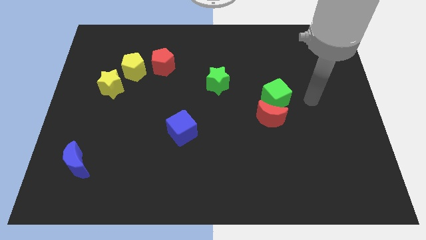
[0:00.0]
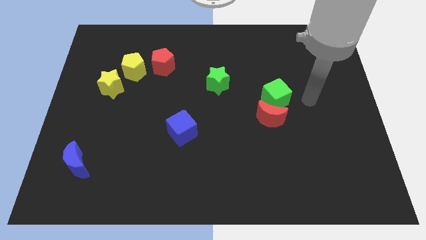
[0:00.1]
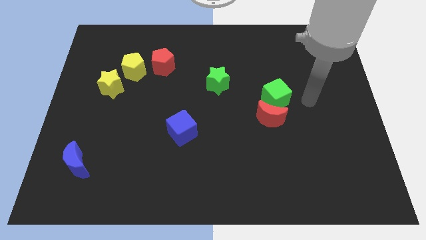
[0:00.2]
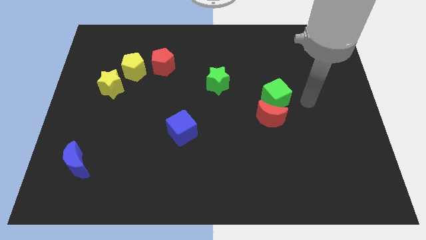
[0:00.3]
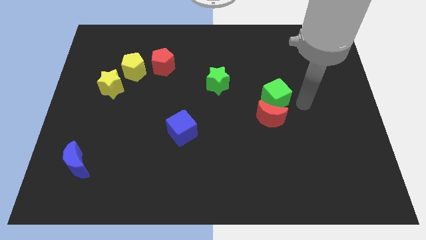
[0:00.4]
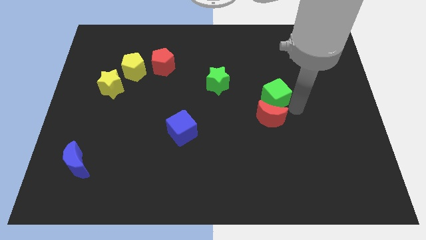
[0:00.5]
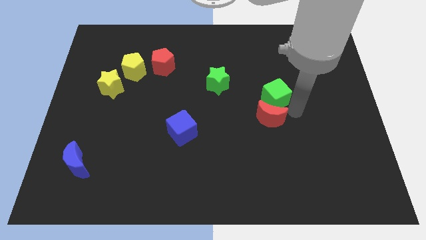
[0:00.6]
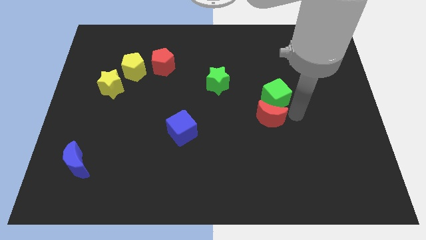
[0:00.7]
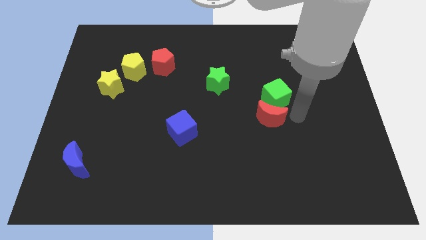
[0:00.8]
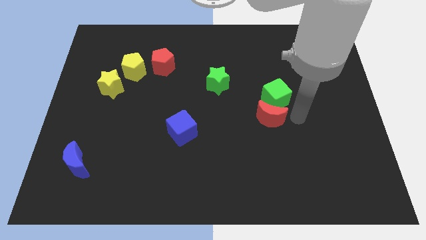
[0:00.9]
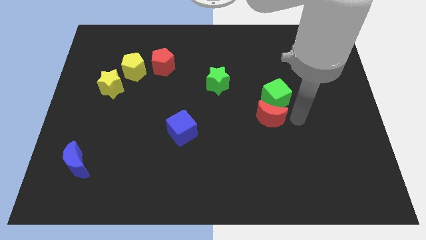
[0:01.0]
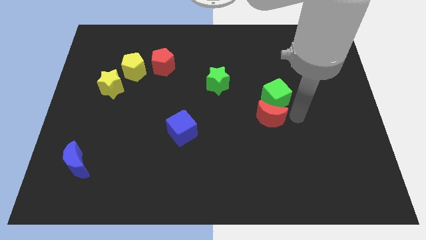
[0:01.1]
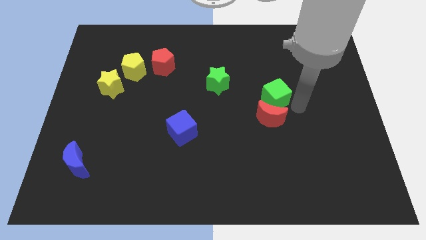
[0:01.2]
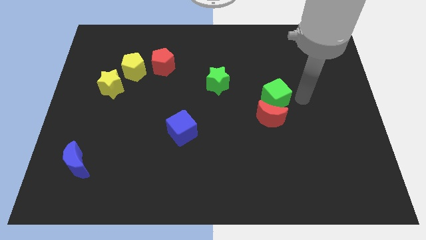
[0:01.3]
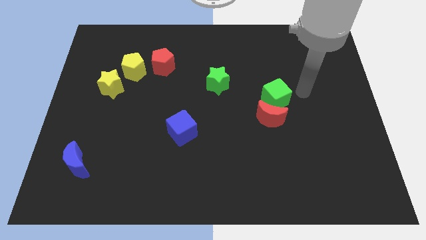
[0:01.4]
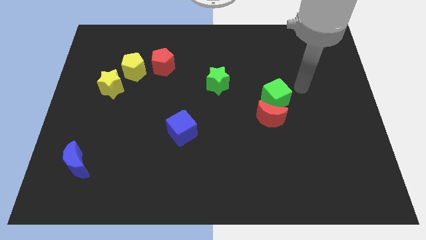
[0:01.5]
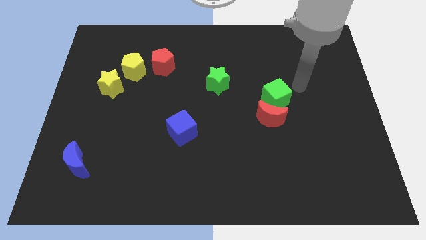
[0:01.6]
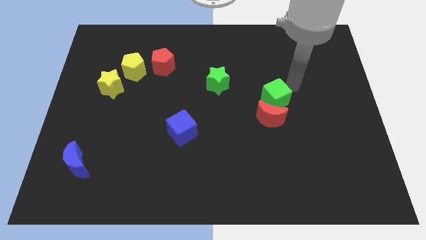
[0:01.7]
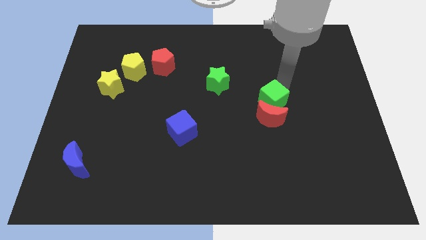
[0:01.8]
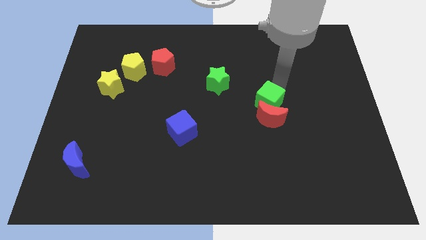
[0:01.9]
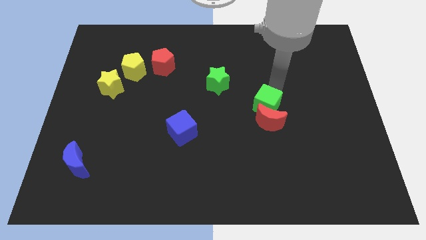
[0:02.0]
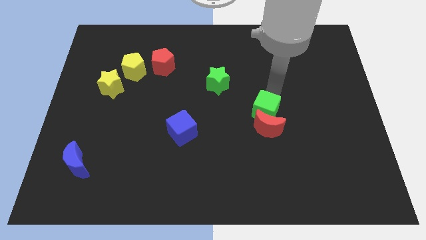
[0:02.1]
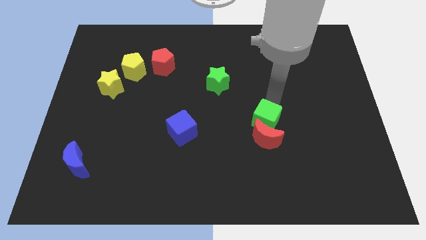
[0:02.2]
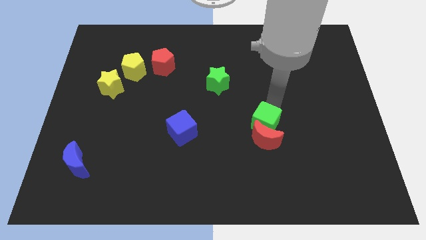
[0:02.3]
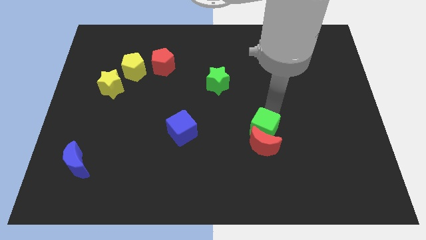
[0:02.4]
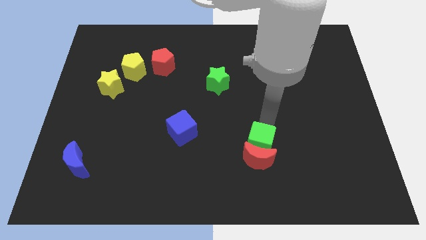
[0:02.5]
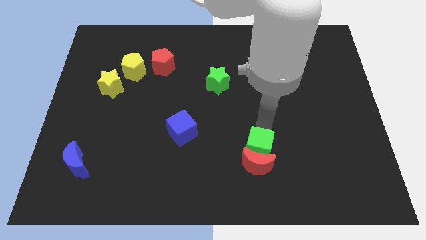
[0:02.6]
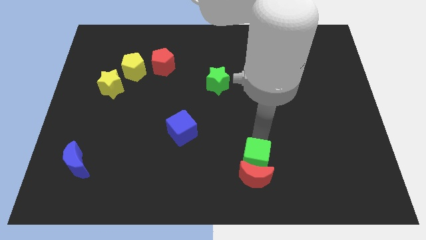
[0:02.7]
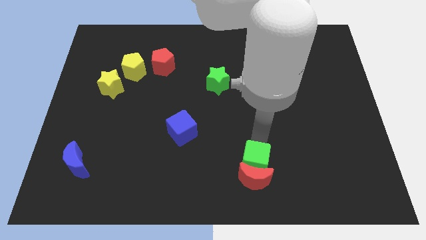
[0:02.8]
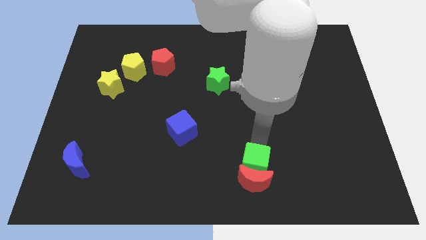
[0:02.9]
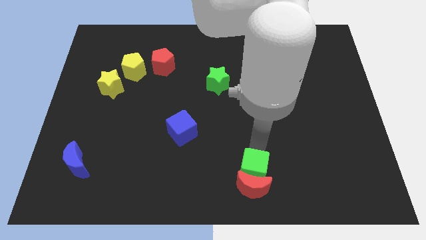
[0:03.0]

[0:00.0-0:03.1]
slide the green cube and red moon towards bottom

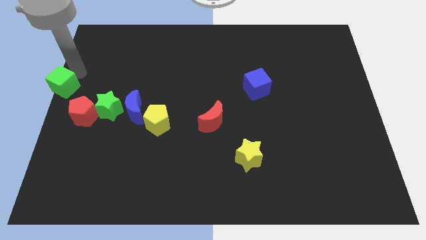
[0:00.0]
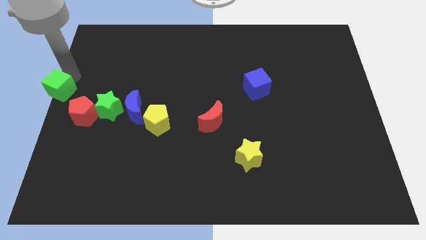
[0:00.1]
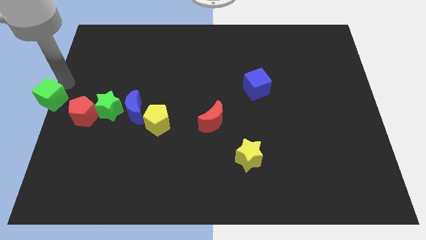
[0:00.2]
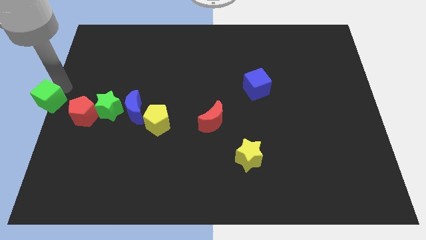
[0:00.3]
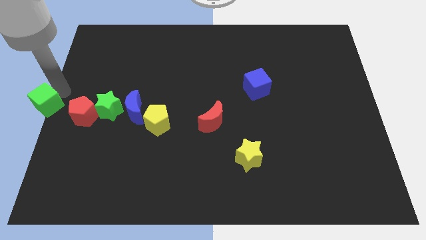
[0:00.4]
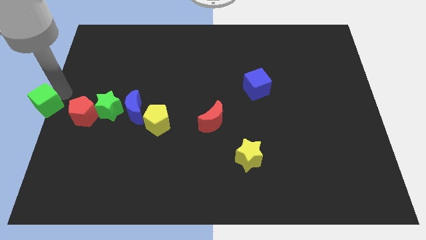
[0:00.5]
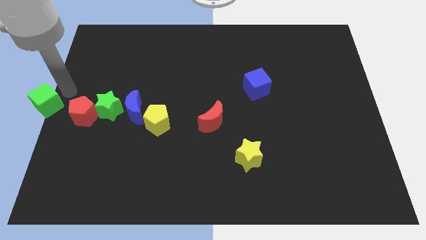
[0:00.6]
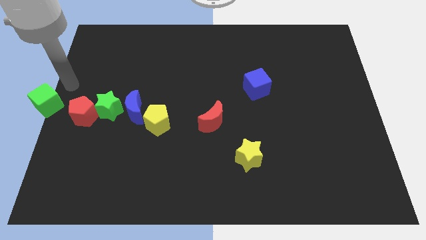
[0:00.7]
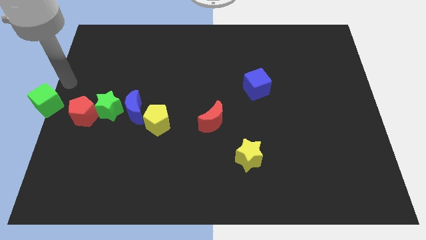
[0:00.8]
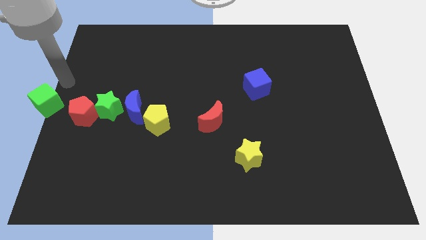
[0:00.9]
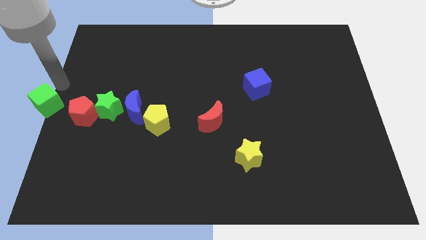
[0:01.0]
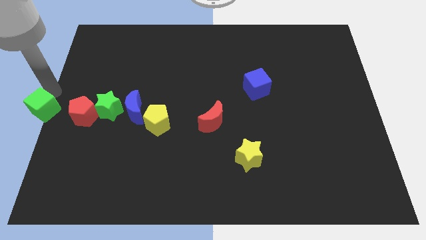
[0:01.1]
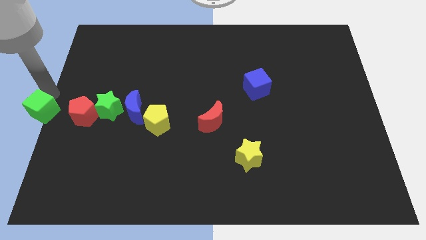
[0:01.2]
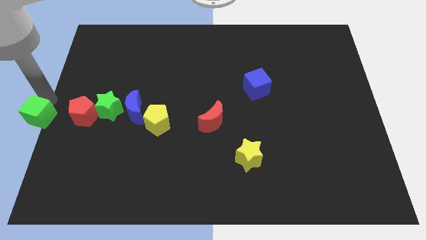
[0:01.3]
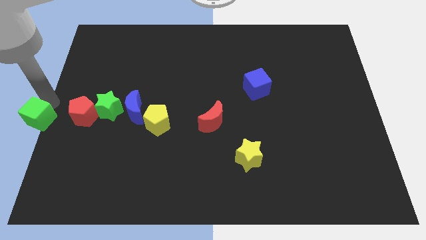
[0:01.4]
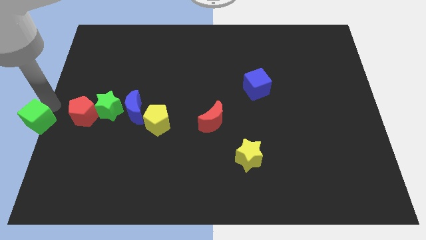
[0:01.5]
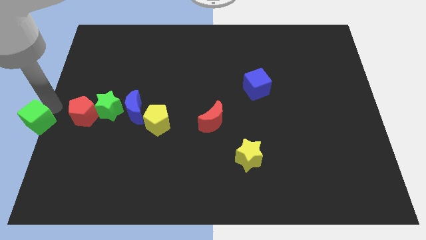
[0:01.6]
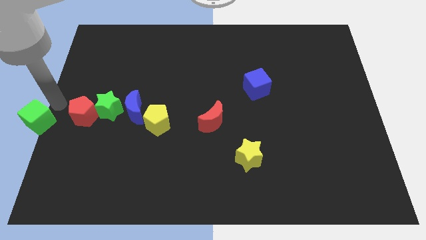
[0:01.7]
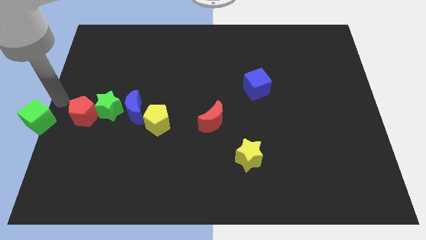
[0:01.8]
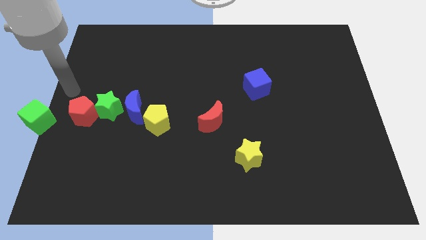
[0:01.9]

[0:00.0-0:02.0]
push the green cube diagonal to the left of the red pentagon

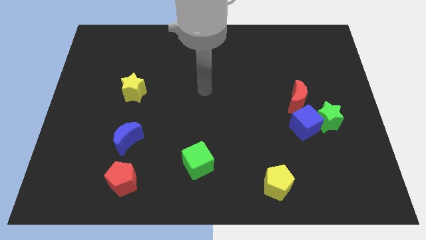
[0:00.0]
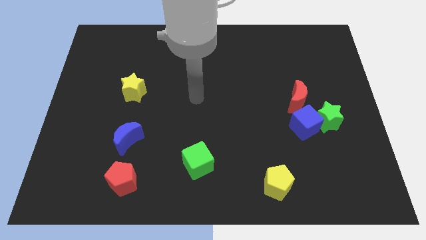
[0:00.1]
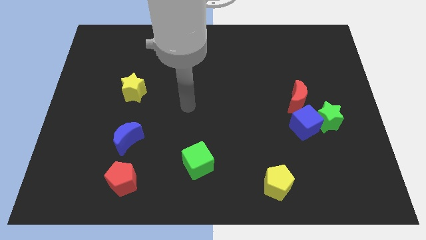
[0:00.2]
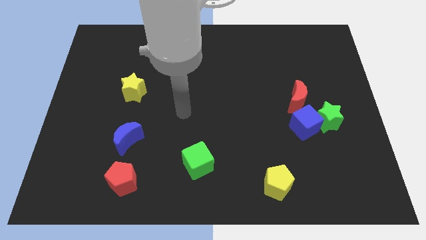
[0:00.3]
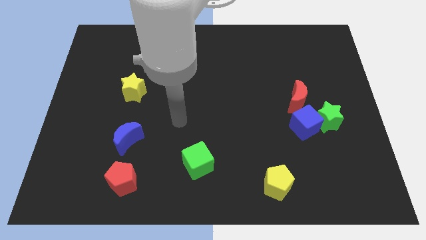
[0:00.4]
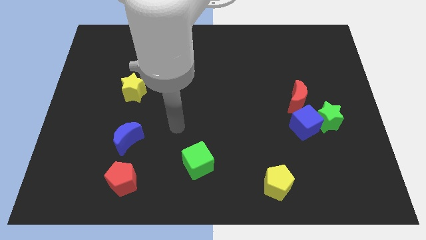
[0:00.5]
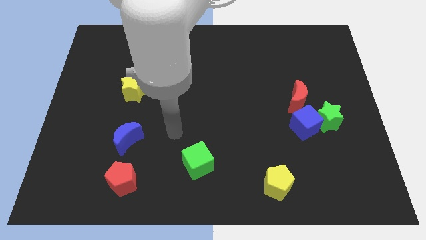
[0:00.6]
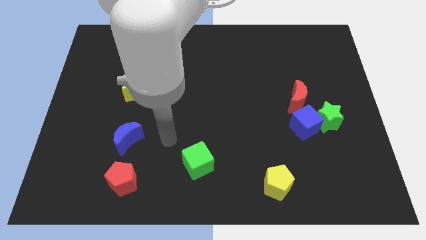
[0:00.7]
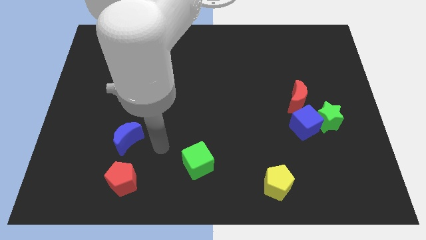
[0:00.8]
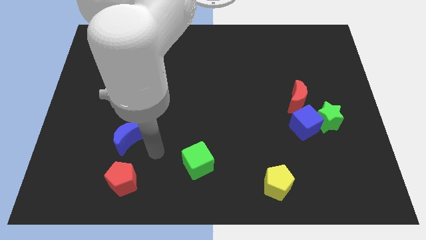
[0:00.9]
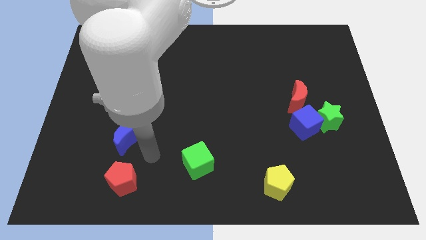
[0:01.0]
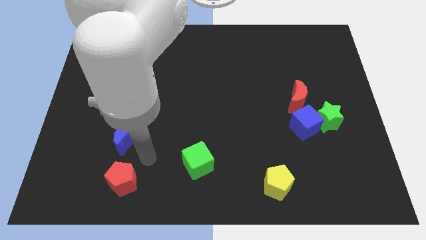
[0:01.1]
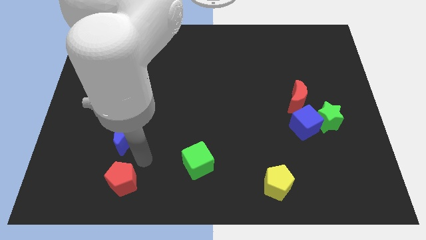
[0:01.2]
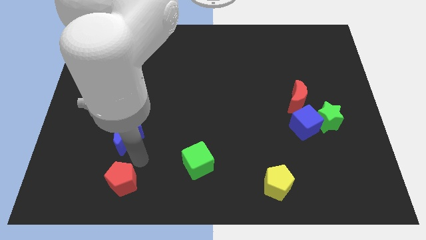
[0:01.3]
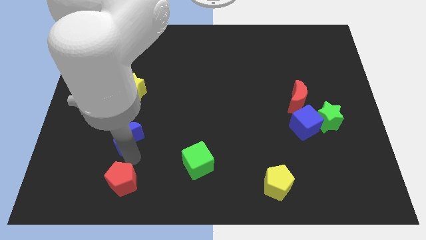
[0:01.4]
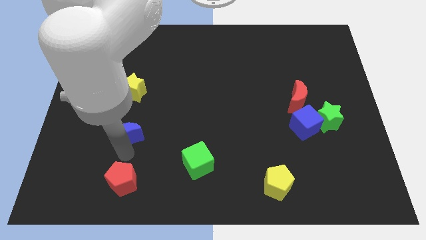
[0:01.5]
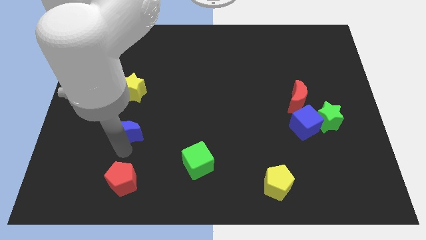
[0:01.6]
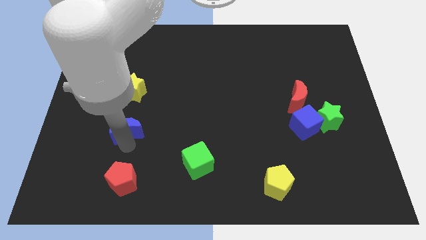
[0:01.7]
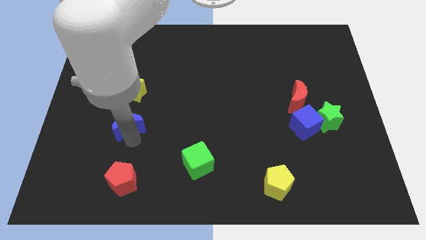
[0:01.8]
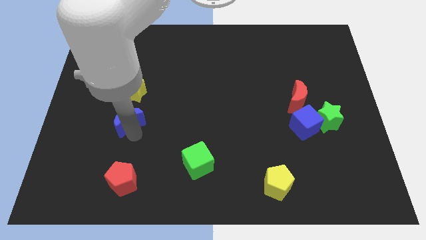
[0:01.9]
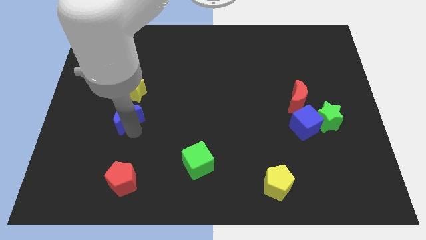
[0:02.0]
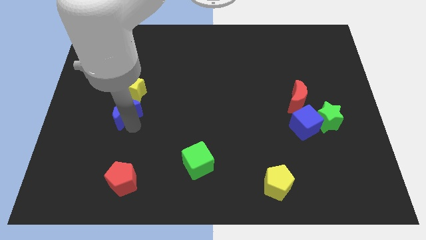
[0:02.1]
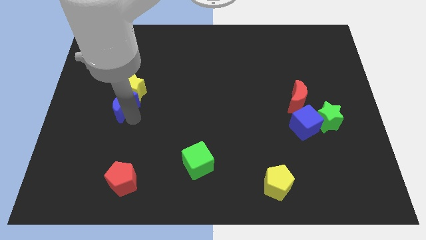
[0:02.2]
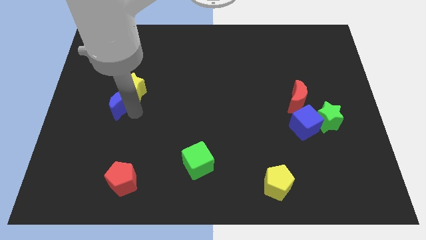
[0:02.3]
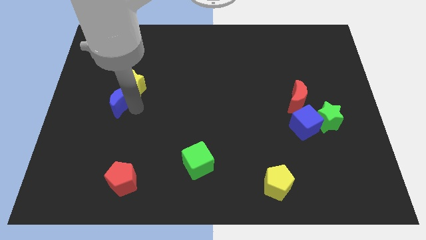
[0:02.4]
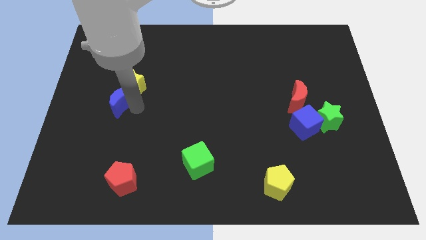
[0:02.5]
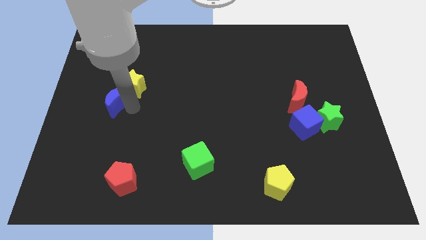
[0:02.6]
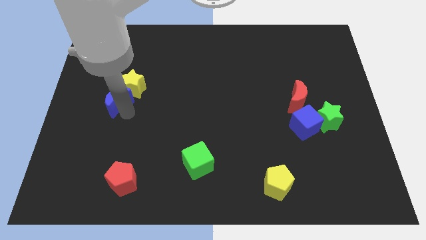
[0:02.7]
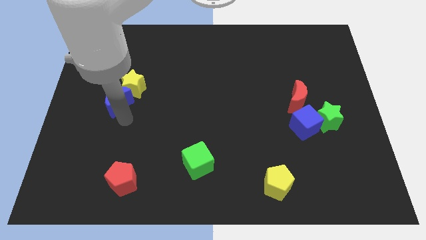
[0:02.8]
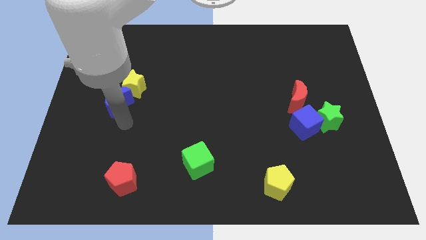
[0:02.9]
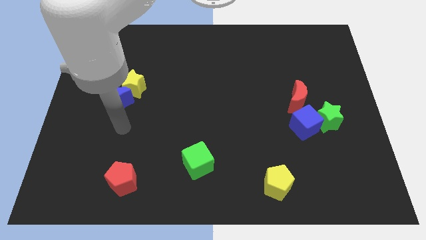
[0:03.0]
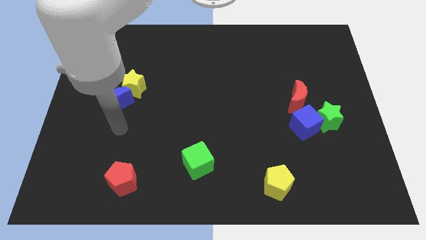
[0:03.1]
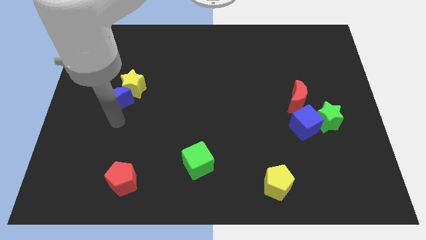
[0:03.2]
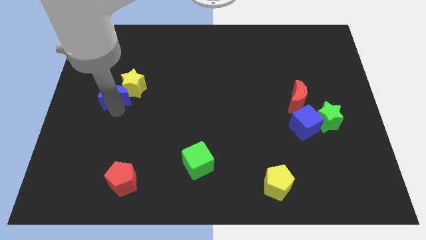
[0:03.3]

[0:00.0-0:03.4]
move the blue crescent to the bottom left to the yellow star

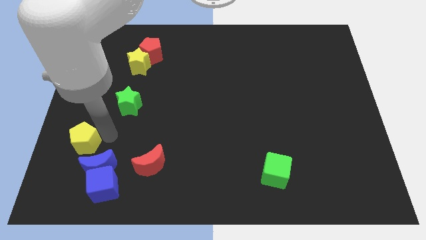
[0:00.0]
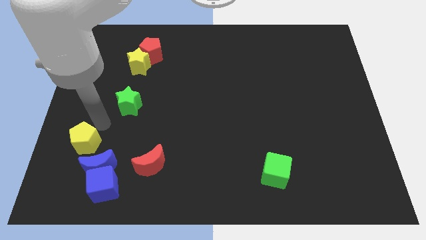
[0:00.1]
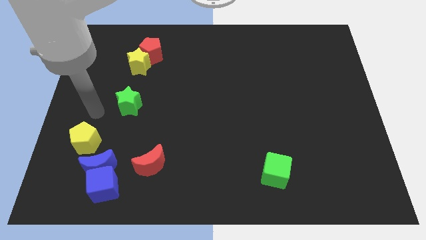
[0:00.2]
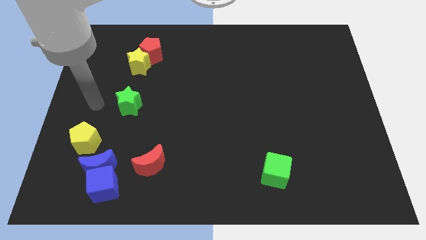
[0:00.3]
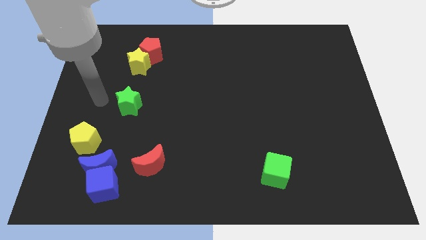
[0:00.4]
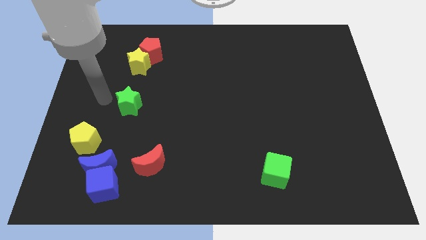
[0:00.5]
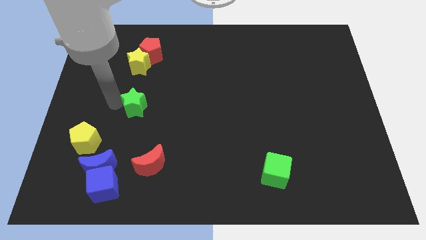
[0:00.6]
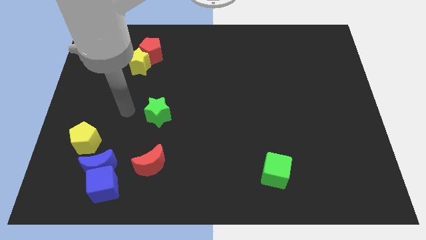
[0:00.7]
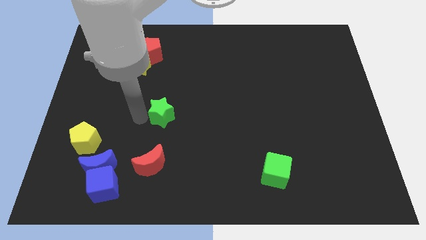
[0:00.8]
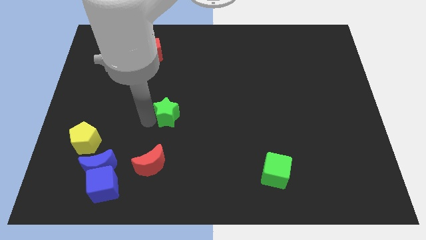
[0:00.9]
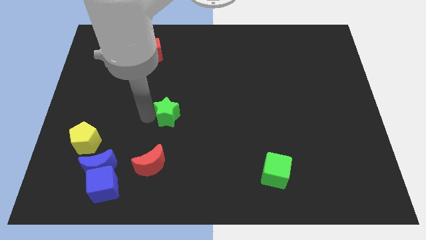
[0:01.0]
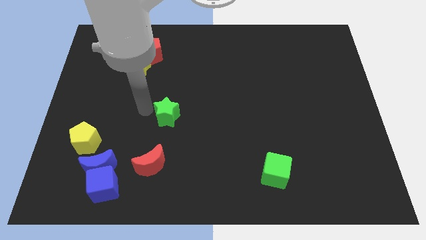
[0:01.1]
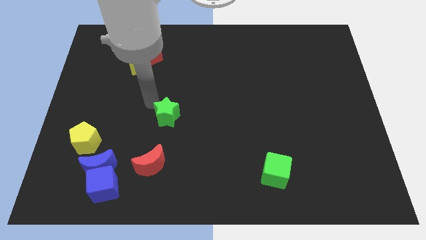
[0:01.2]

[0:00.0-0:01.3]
push the green star towards the right
